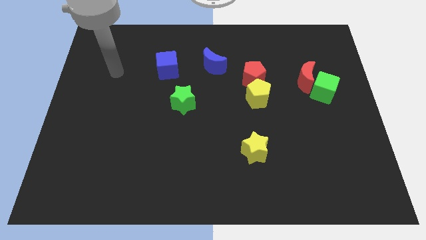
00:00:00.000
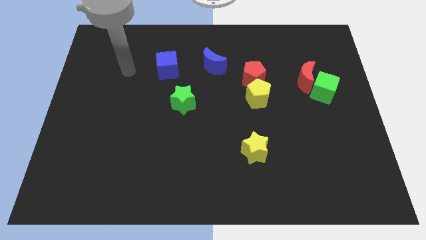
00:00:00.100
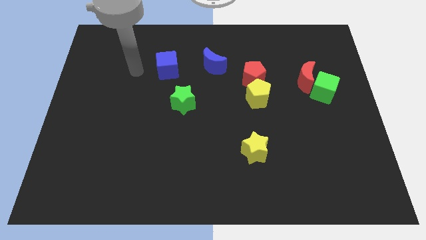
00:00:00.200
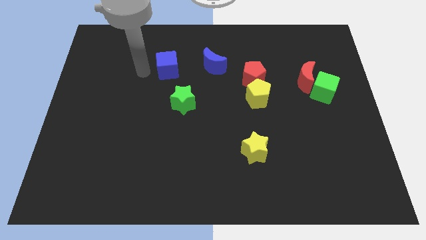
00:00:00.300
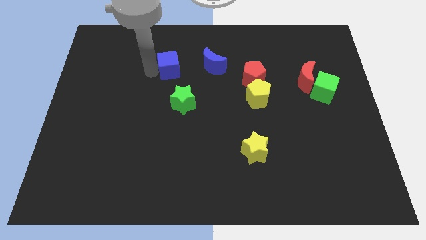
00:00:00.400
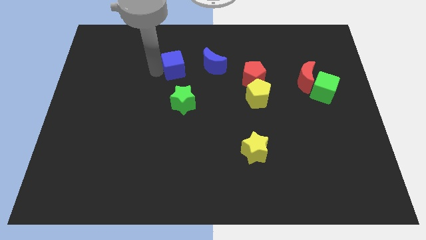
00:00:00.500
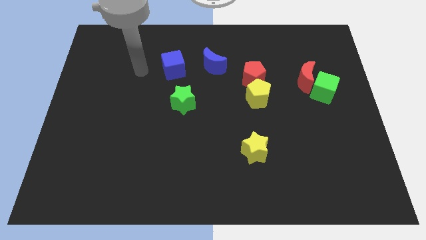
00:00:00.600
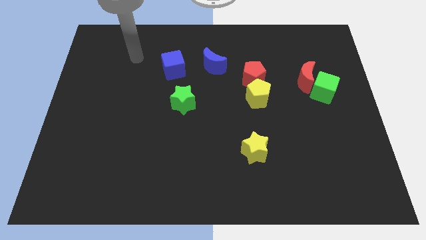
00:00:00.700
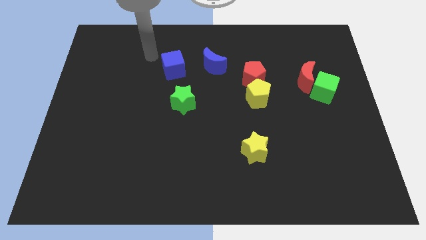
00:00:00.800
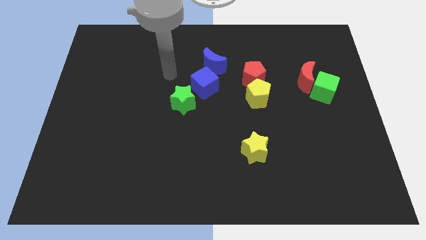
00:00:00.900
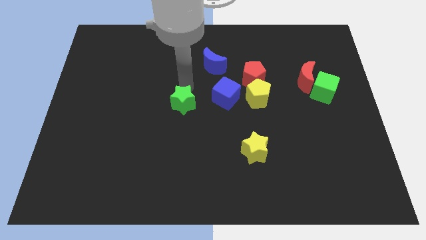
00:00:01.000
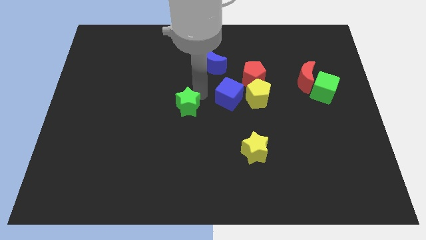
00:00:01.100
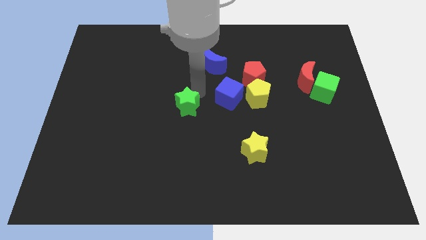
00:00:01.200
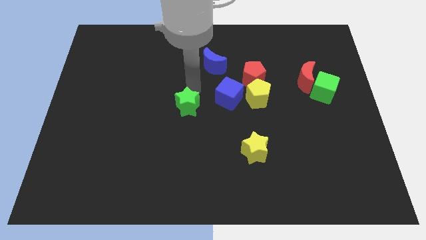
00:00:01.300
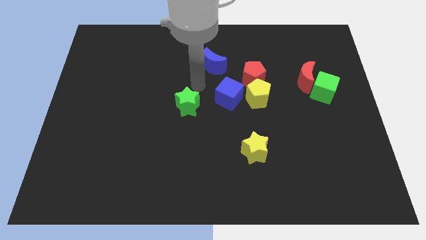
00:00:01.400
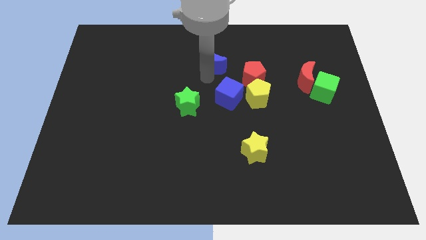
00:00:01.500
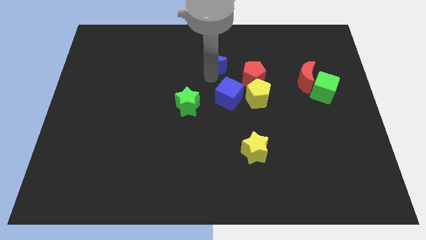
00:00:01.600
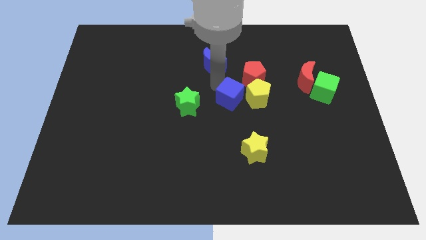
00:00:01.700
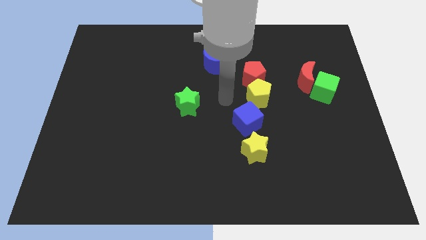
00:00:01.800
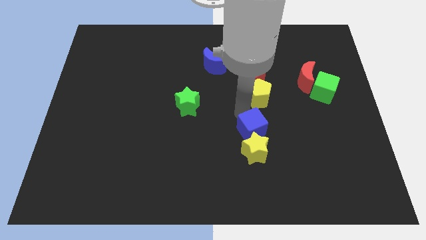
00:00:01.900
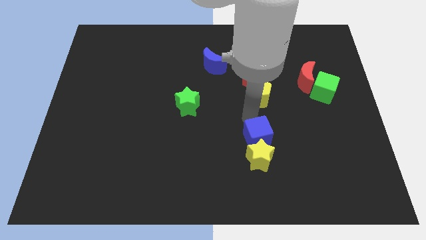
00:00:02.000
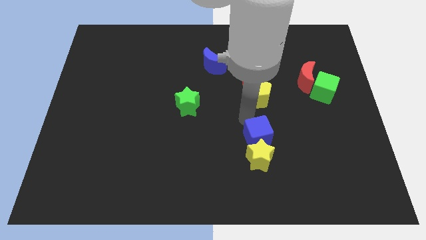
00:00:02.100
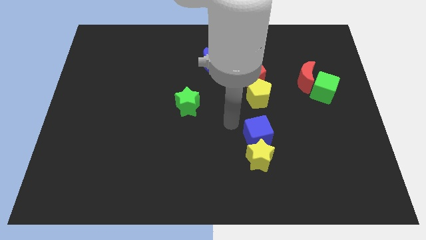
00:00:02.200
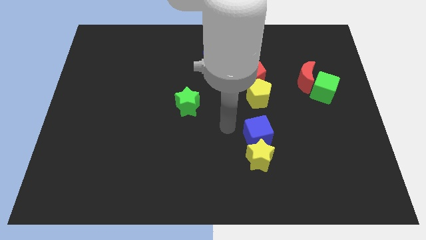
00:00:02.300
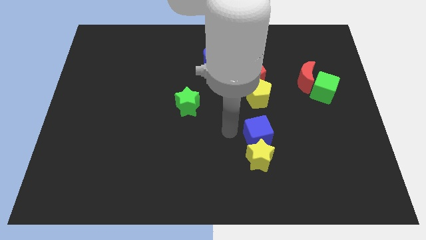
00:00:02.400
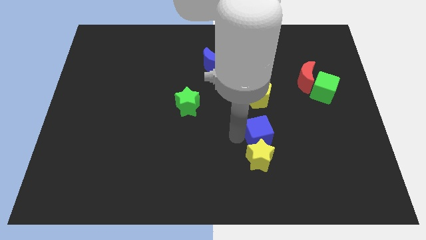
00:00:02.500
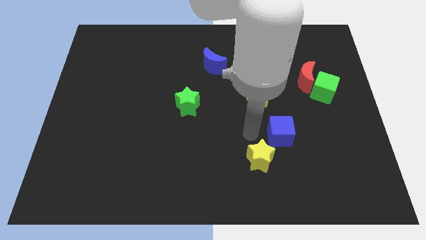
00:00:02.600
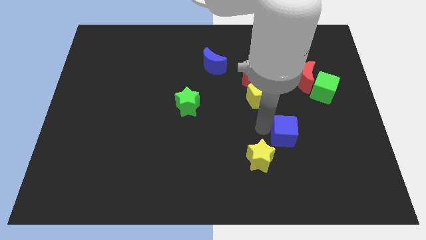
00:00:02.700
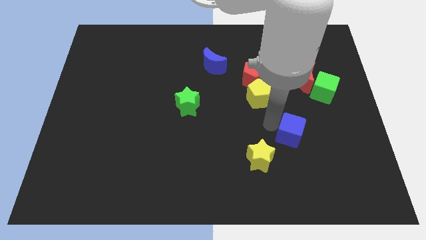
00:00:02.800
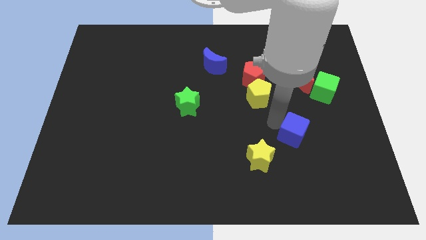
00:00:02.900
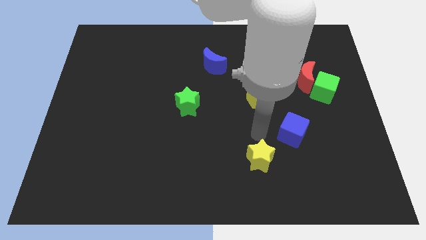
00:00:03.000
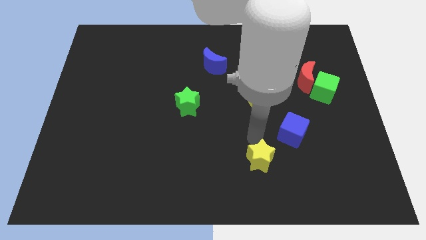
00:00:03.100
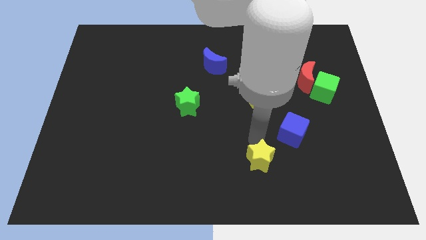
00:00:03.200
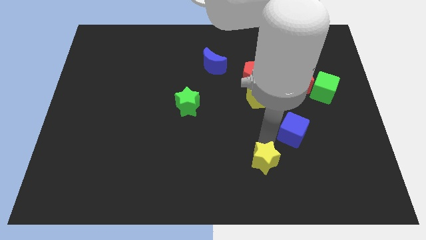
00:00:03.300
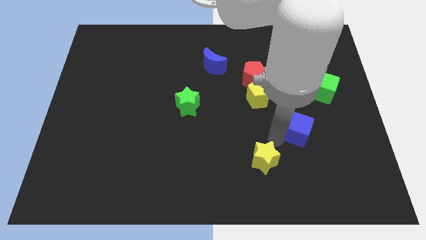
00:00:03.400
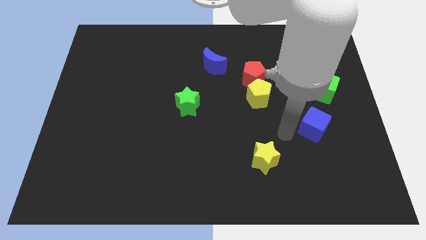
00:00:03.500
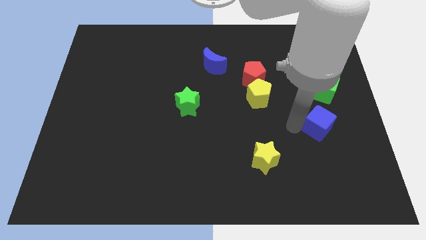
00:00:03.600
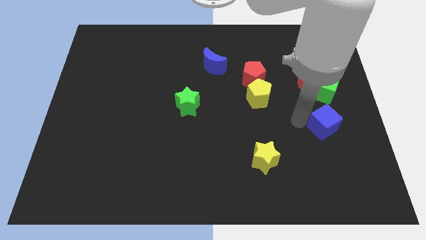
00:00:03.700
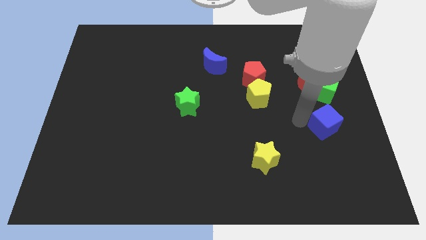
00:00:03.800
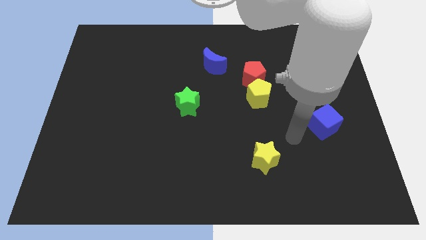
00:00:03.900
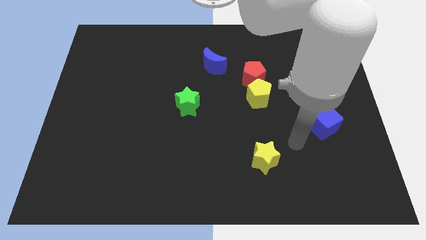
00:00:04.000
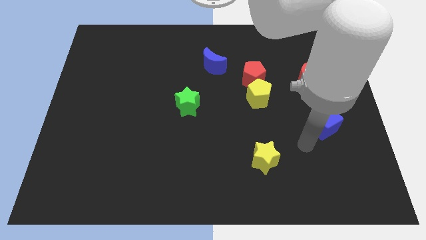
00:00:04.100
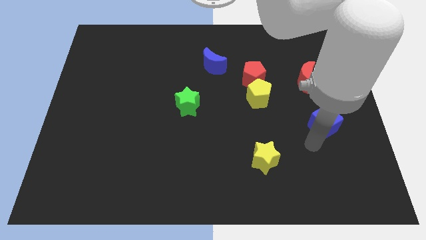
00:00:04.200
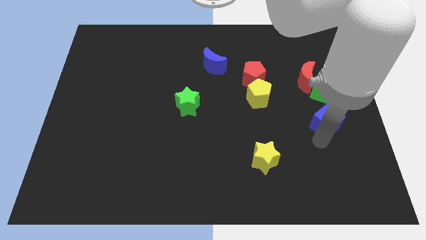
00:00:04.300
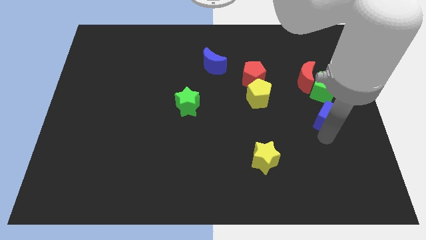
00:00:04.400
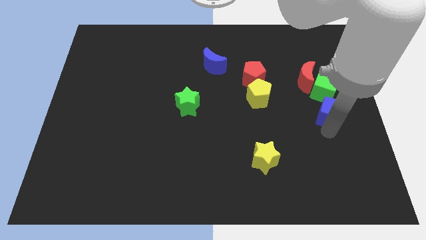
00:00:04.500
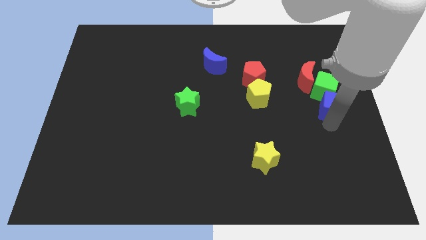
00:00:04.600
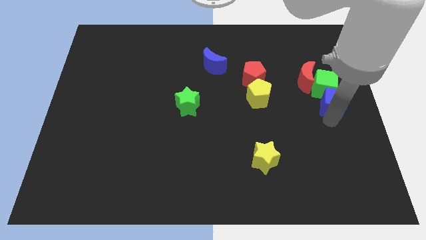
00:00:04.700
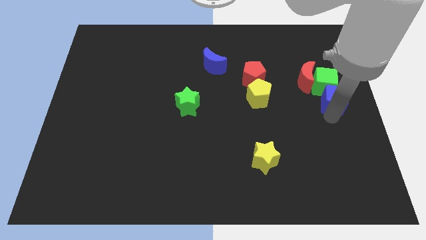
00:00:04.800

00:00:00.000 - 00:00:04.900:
move the blue cube to the green cube

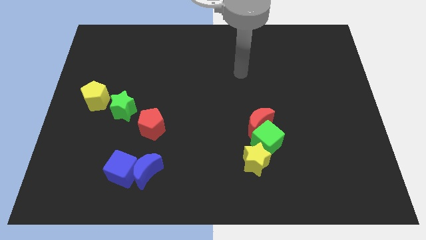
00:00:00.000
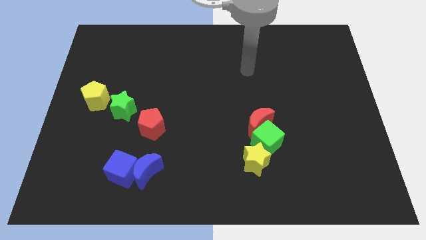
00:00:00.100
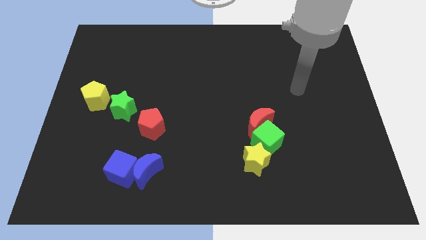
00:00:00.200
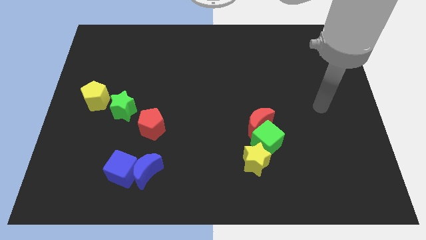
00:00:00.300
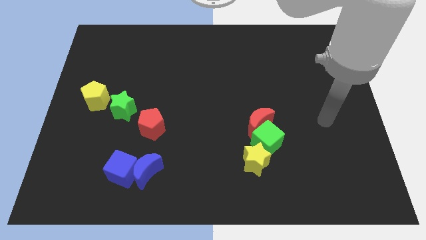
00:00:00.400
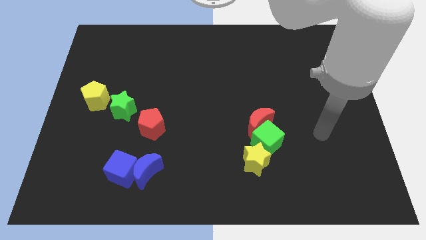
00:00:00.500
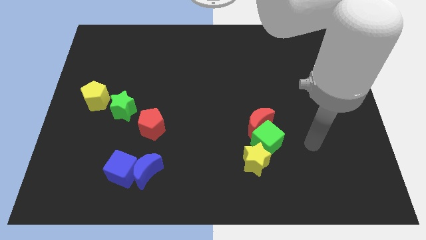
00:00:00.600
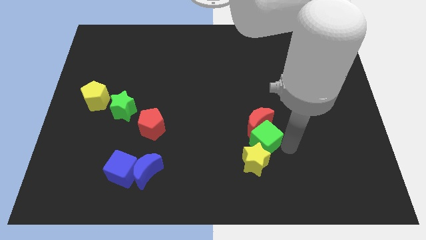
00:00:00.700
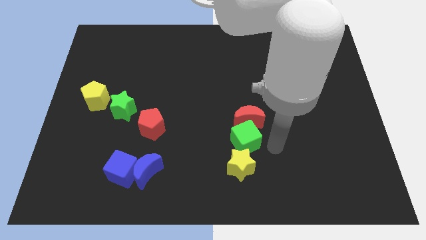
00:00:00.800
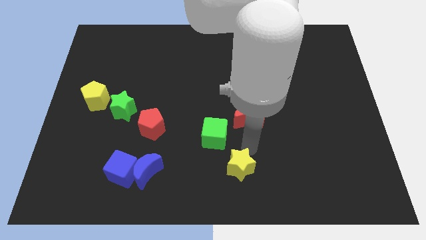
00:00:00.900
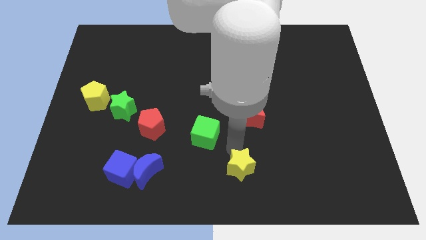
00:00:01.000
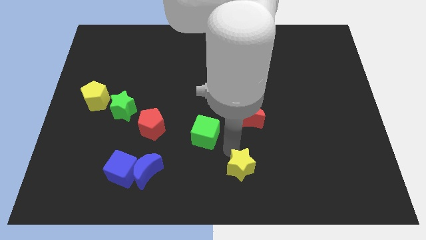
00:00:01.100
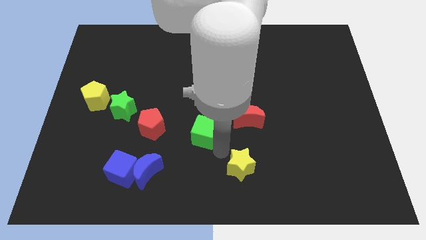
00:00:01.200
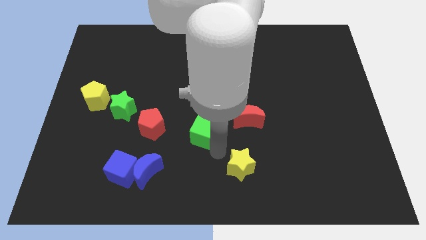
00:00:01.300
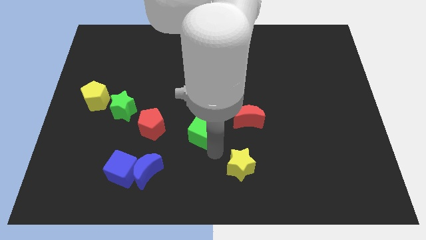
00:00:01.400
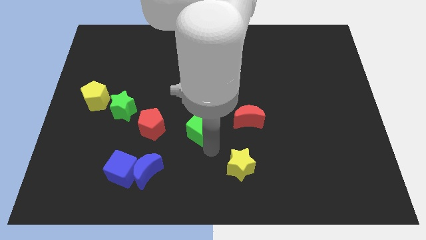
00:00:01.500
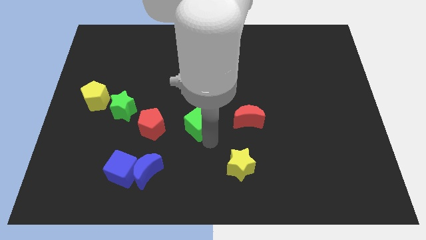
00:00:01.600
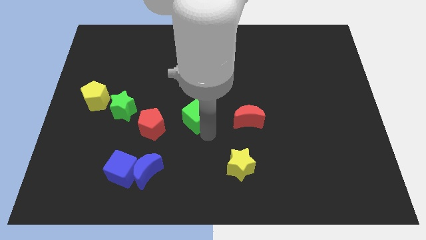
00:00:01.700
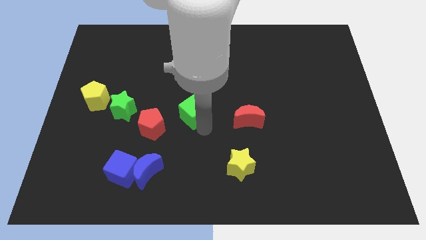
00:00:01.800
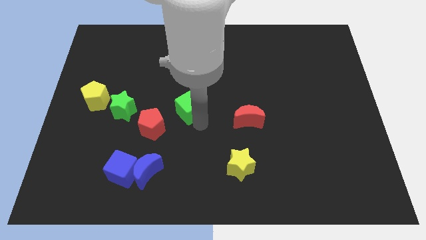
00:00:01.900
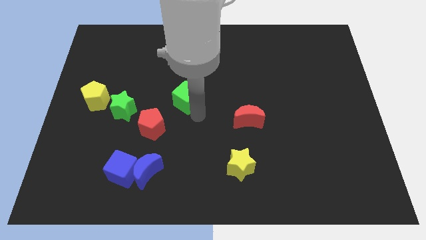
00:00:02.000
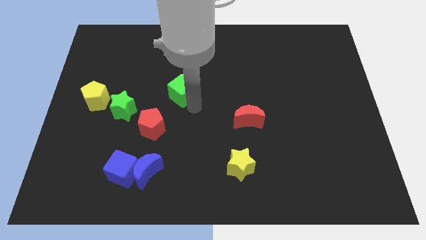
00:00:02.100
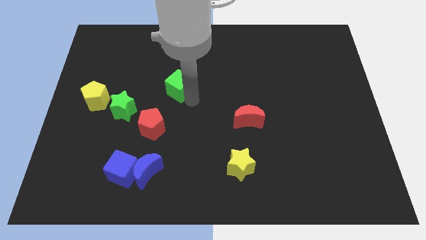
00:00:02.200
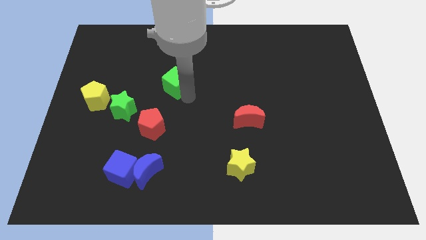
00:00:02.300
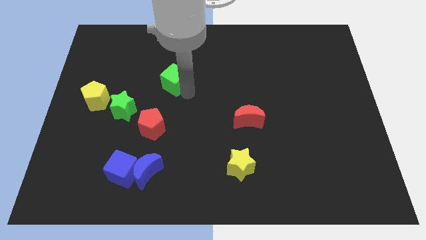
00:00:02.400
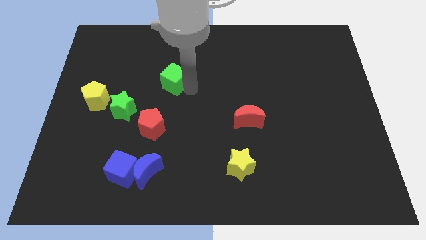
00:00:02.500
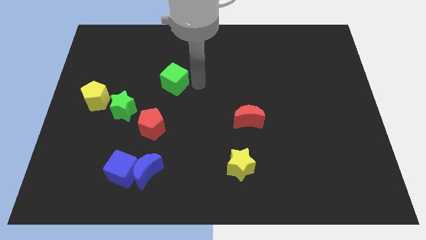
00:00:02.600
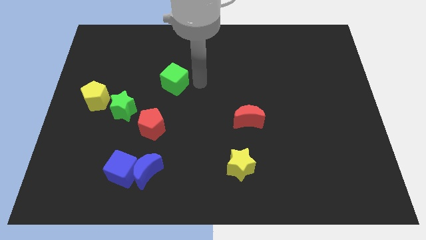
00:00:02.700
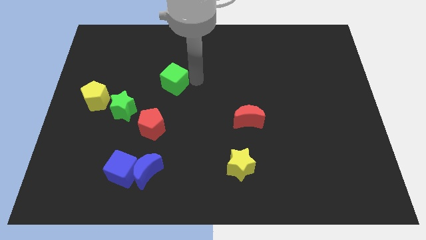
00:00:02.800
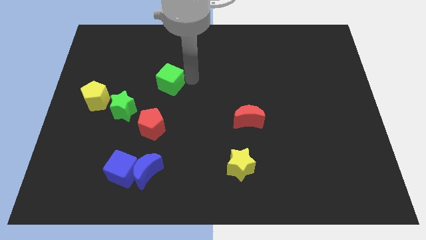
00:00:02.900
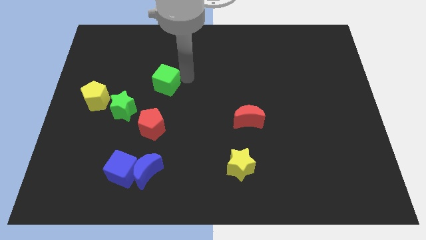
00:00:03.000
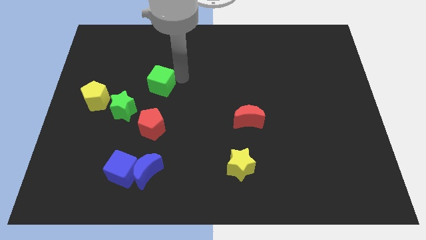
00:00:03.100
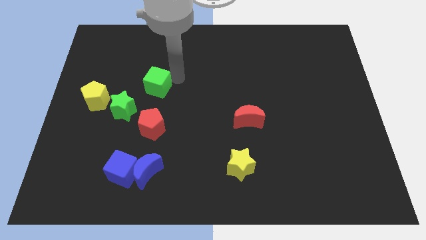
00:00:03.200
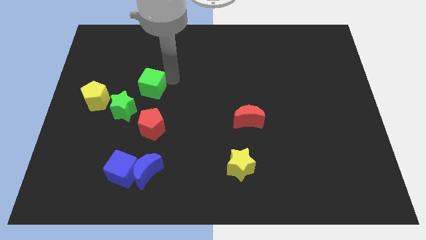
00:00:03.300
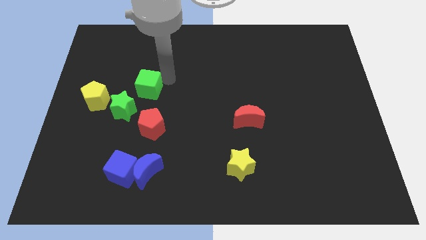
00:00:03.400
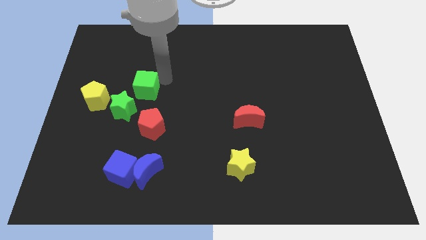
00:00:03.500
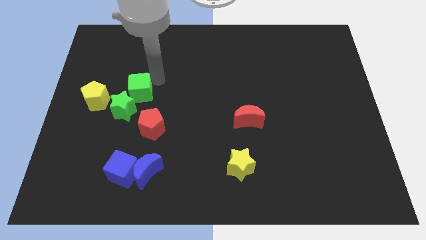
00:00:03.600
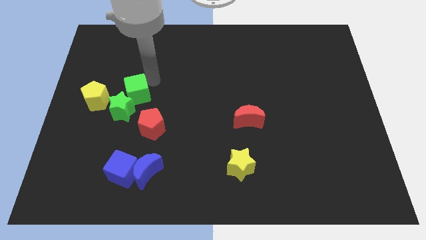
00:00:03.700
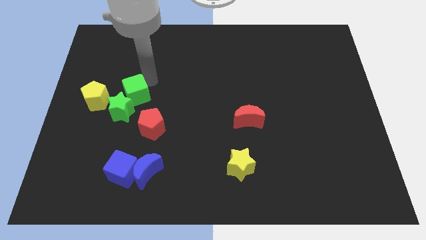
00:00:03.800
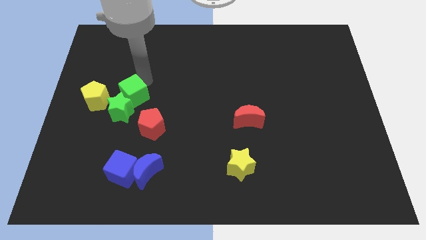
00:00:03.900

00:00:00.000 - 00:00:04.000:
put the green cube to the green star

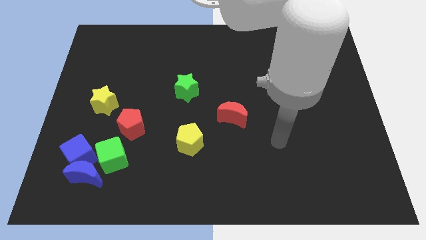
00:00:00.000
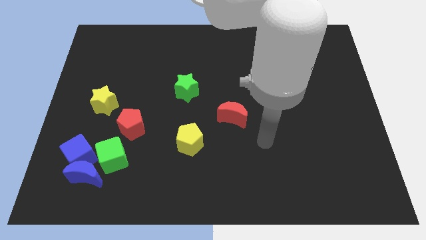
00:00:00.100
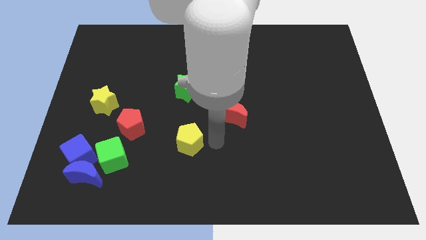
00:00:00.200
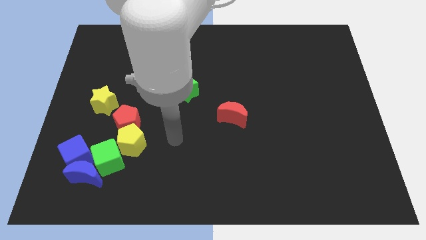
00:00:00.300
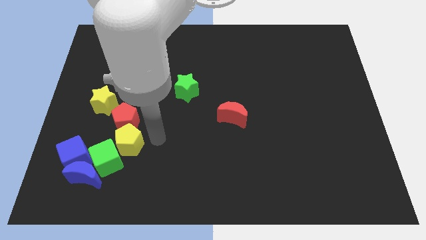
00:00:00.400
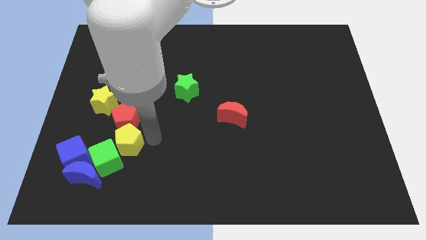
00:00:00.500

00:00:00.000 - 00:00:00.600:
push the yellow pentagon to the green cube
